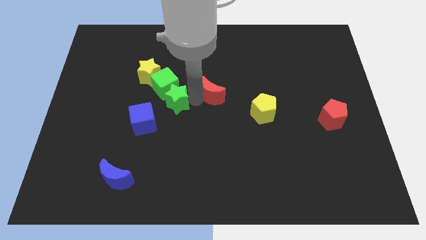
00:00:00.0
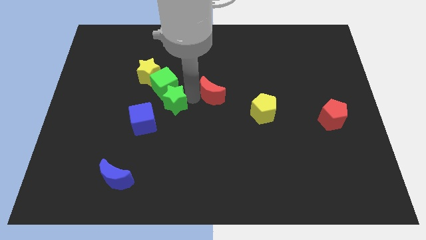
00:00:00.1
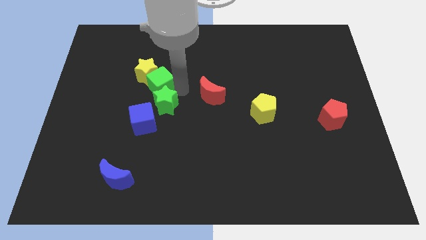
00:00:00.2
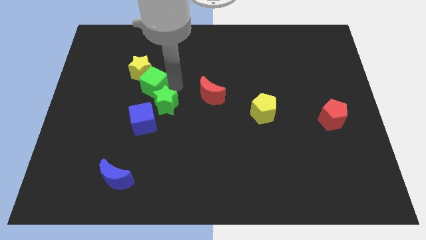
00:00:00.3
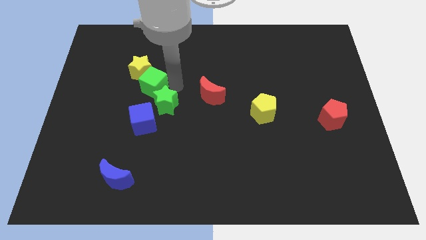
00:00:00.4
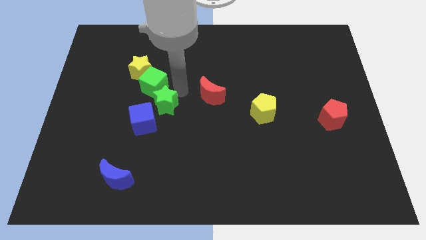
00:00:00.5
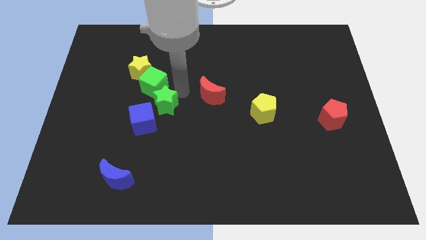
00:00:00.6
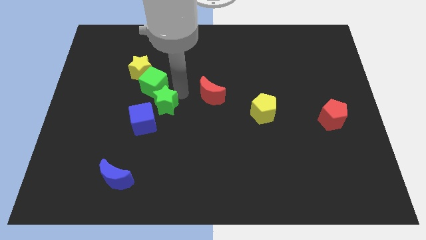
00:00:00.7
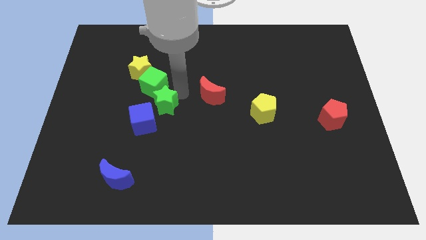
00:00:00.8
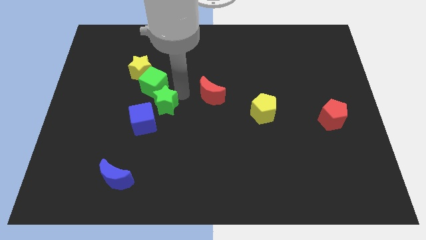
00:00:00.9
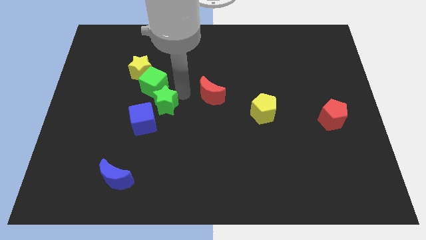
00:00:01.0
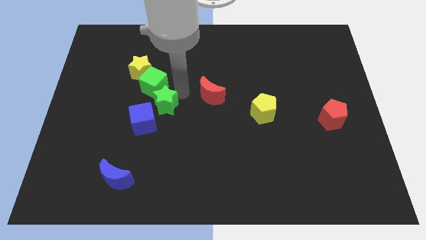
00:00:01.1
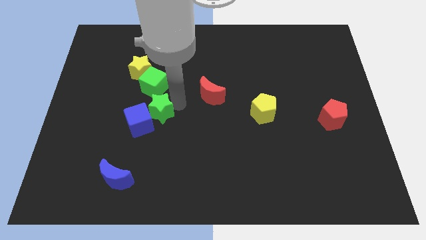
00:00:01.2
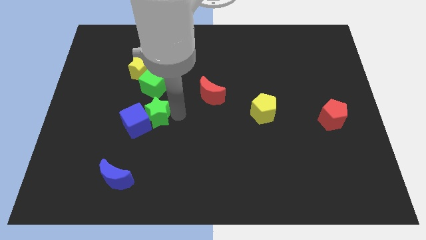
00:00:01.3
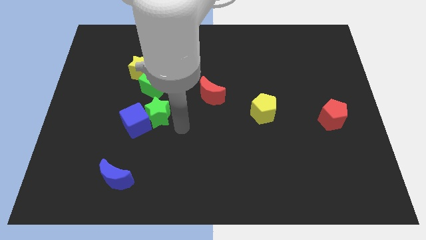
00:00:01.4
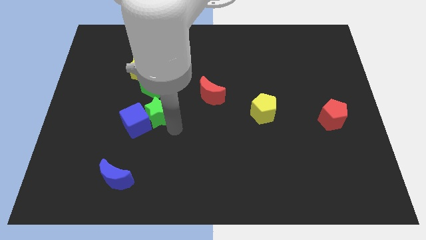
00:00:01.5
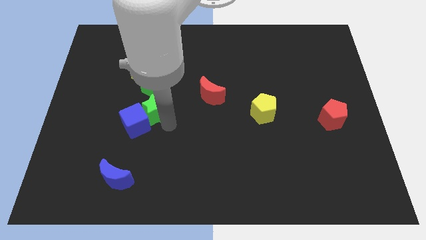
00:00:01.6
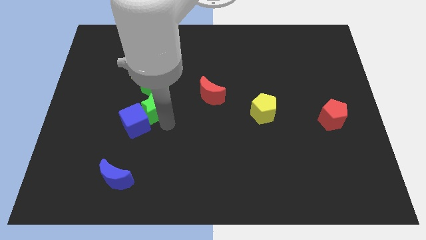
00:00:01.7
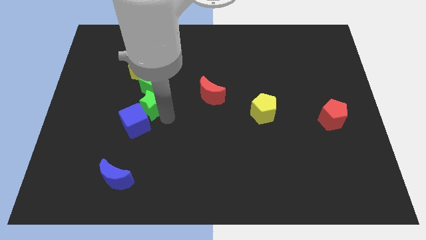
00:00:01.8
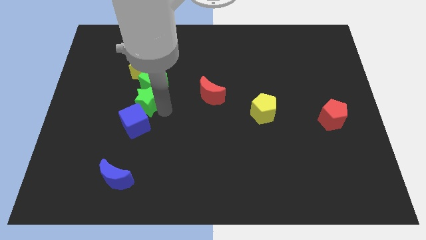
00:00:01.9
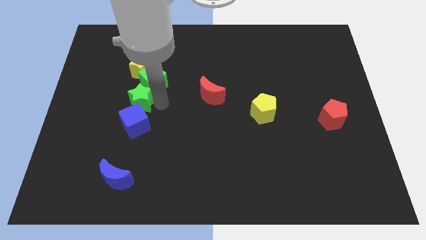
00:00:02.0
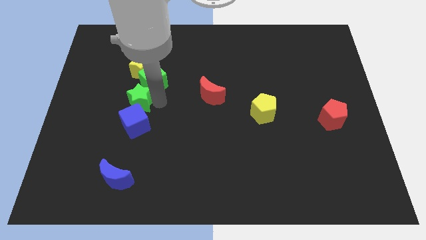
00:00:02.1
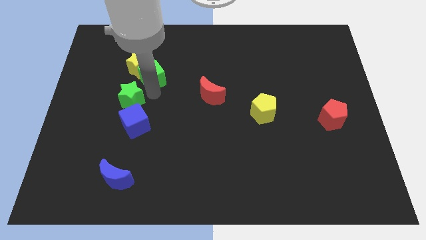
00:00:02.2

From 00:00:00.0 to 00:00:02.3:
put the green star and the blue cube together

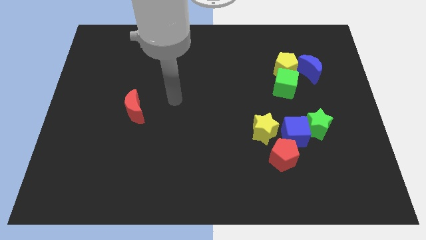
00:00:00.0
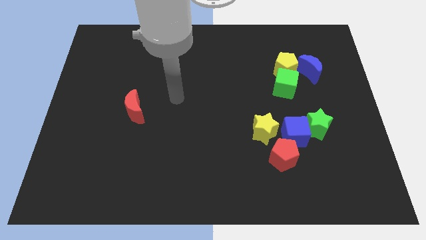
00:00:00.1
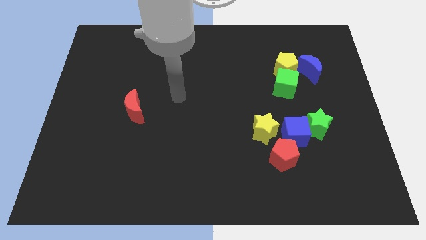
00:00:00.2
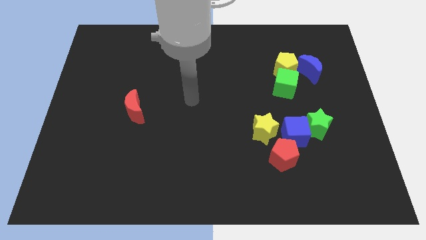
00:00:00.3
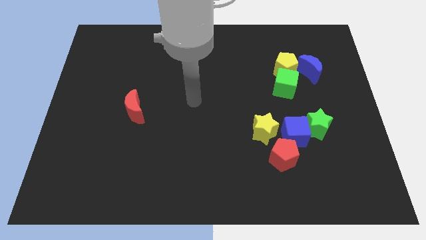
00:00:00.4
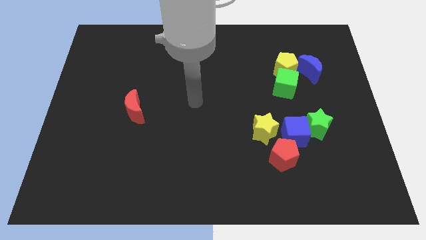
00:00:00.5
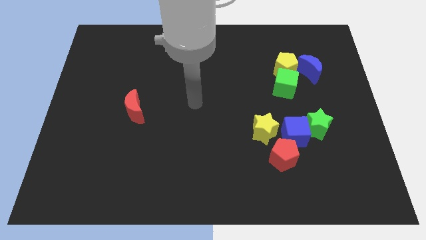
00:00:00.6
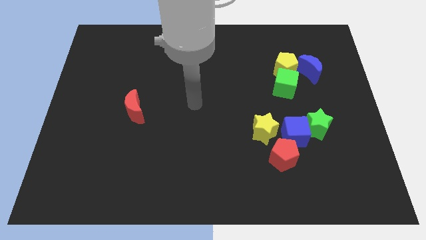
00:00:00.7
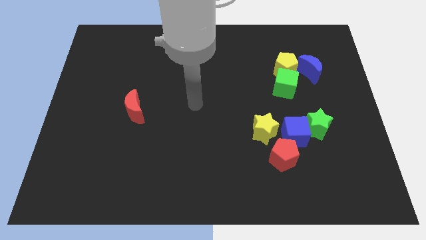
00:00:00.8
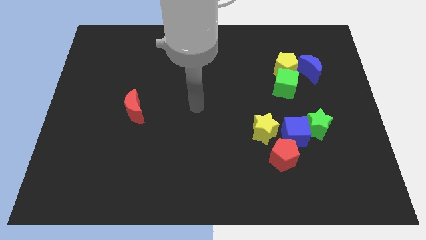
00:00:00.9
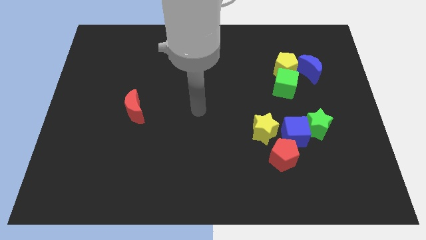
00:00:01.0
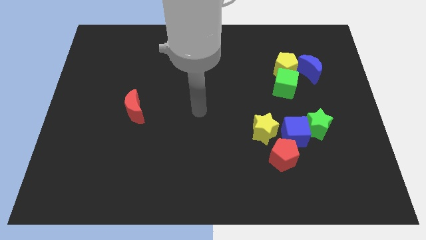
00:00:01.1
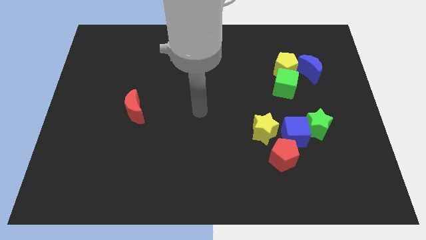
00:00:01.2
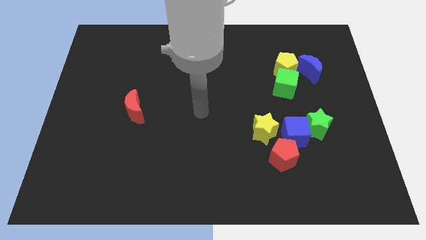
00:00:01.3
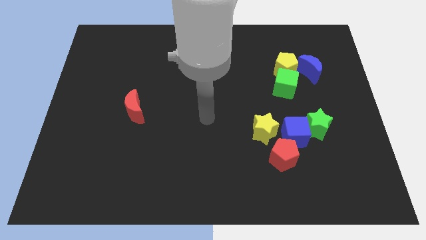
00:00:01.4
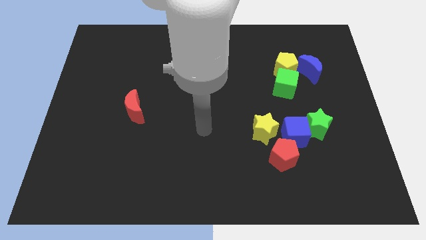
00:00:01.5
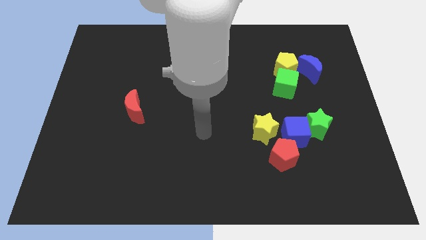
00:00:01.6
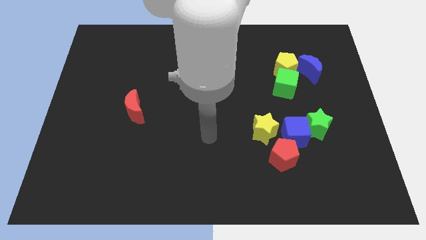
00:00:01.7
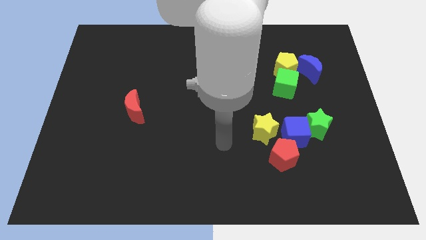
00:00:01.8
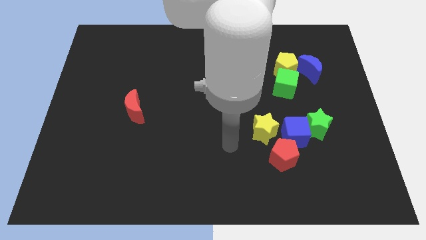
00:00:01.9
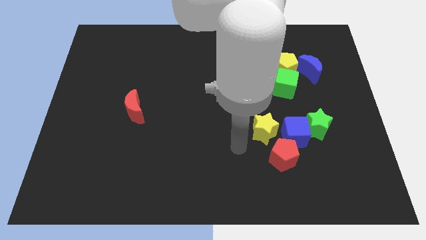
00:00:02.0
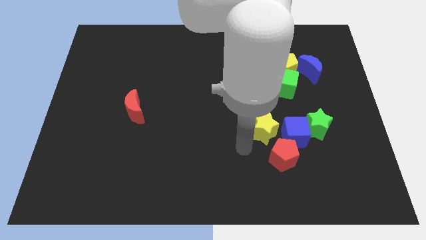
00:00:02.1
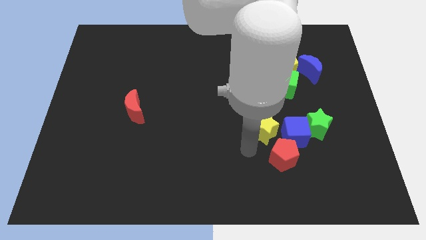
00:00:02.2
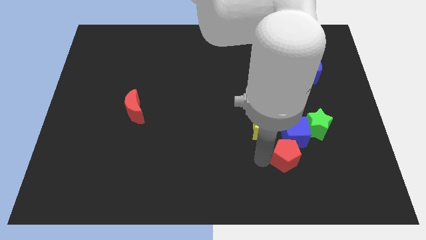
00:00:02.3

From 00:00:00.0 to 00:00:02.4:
move your arm to the bottom side of the yellow star

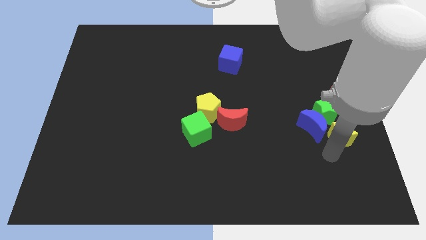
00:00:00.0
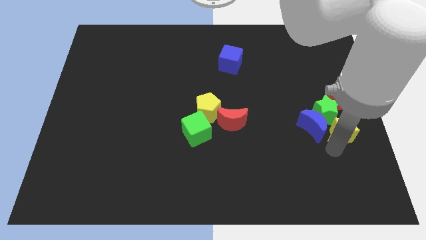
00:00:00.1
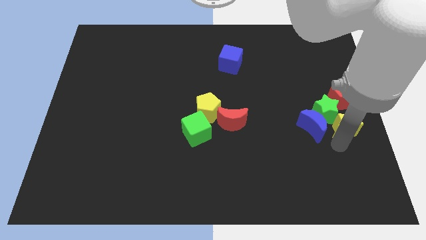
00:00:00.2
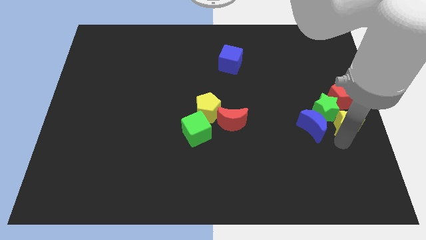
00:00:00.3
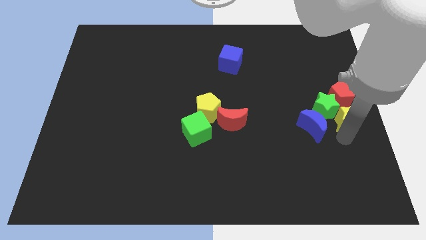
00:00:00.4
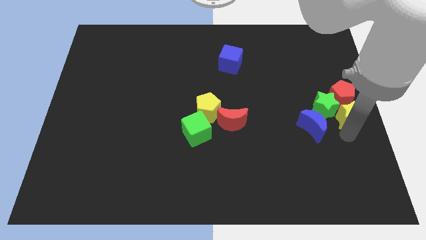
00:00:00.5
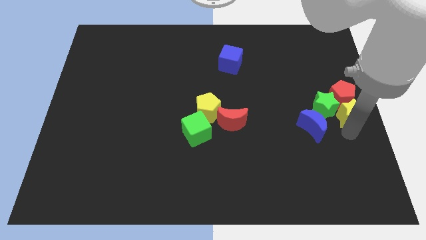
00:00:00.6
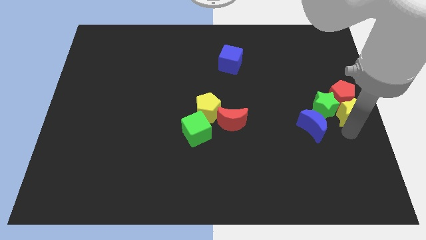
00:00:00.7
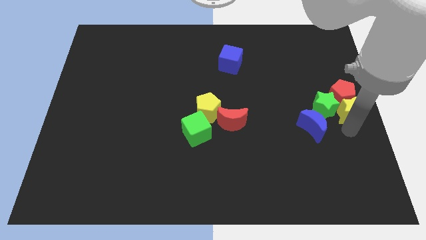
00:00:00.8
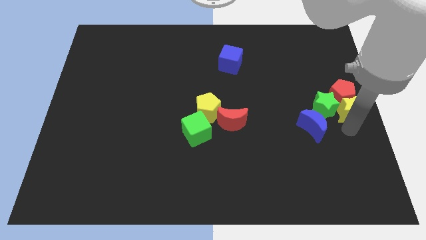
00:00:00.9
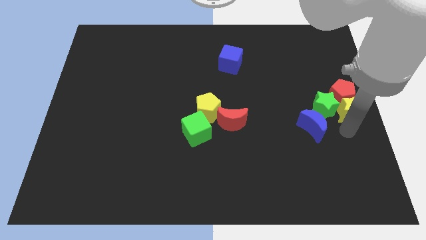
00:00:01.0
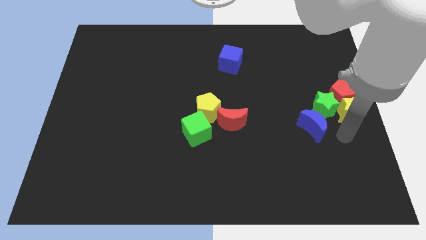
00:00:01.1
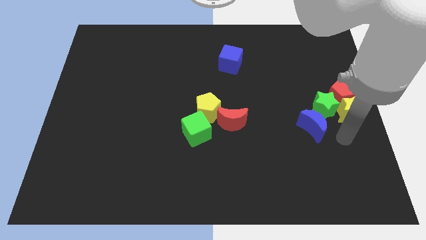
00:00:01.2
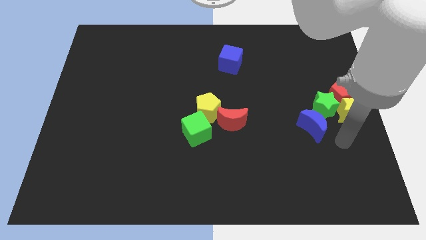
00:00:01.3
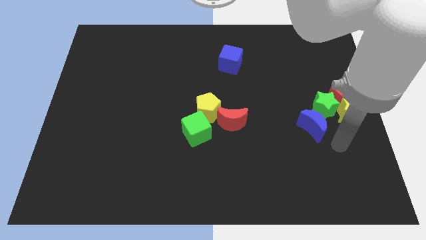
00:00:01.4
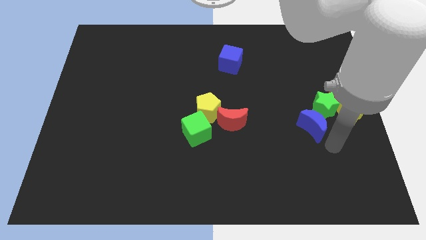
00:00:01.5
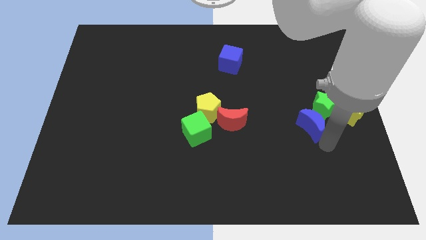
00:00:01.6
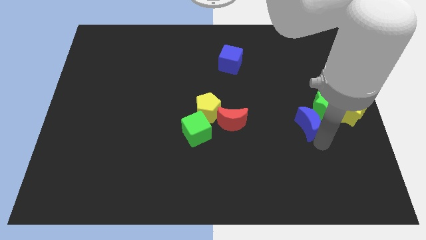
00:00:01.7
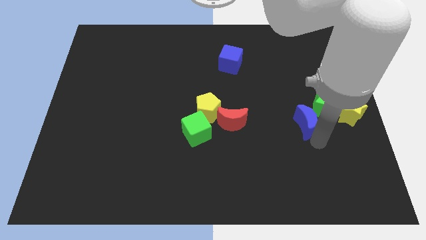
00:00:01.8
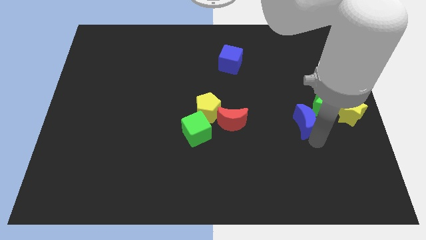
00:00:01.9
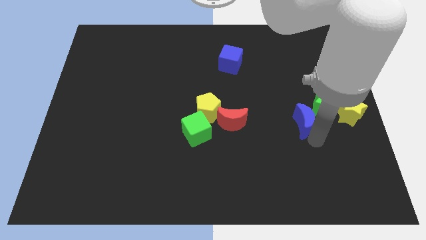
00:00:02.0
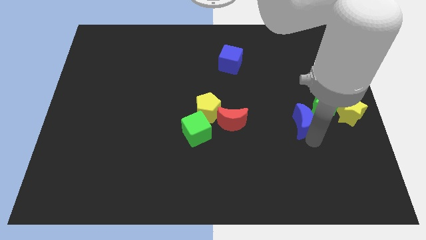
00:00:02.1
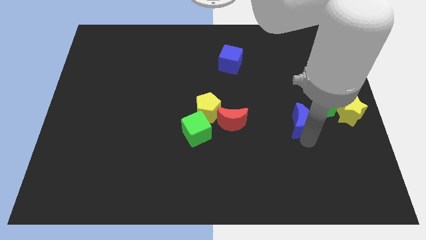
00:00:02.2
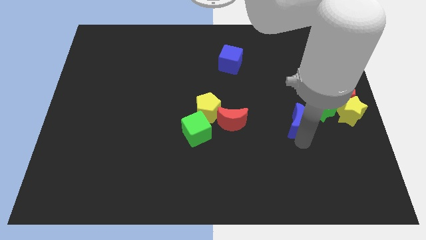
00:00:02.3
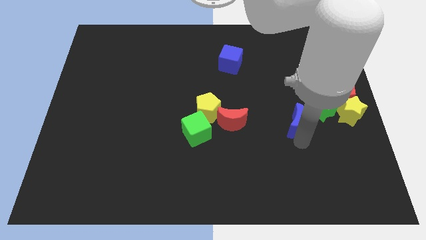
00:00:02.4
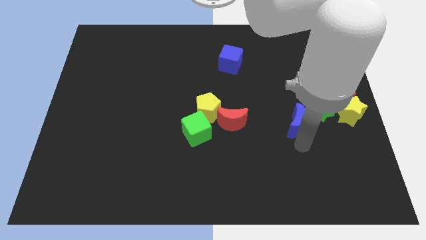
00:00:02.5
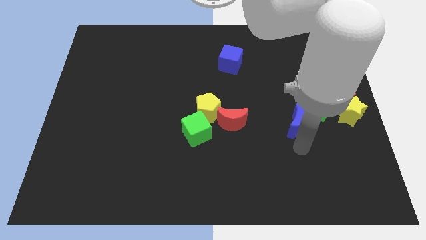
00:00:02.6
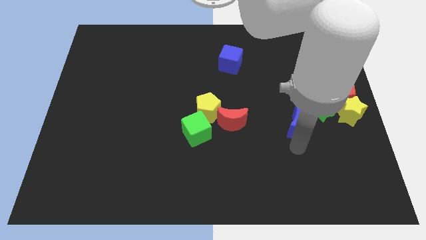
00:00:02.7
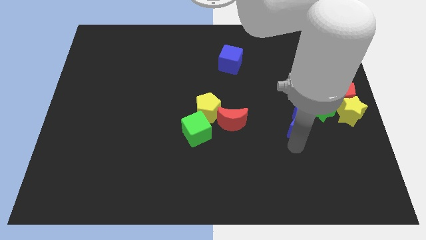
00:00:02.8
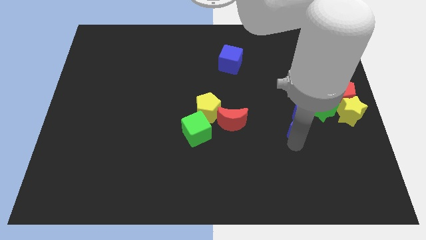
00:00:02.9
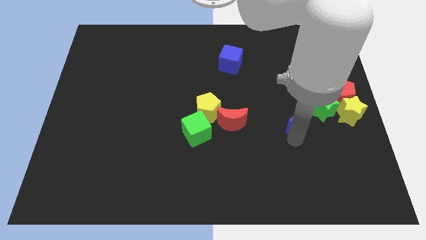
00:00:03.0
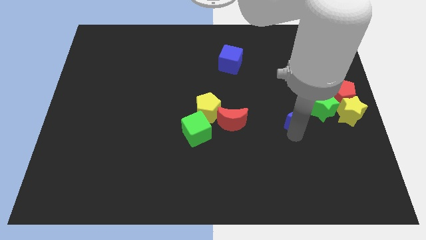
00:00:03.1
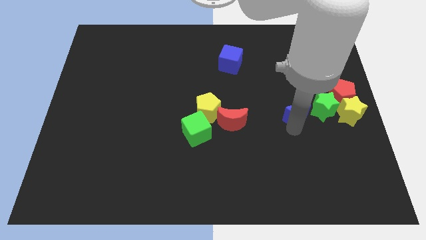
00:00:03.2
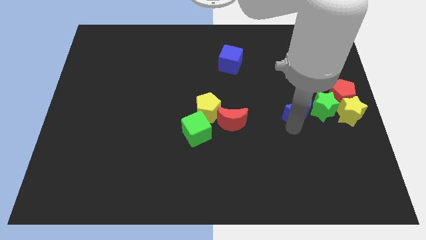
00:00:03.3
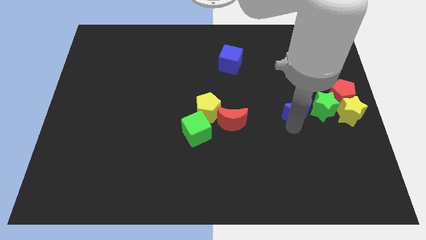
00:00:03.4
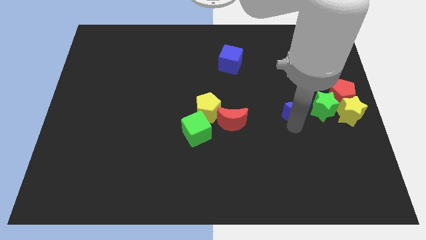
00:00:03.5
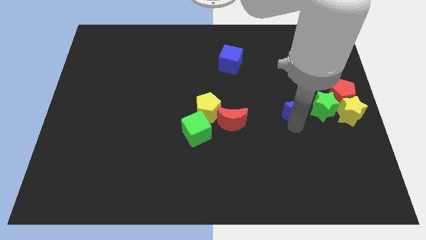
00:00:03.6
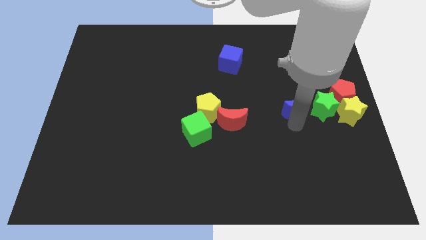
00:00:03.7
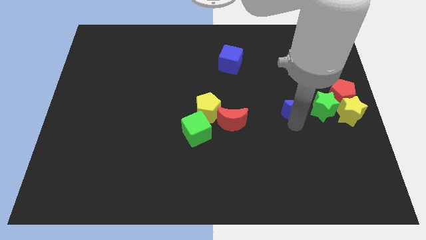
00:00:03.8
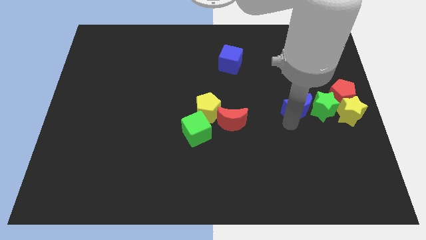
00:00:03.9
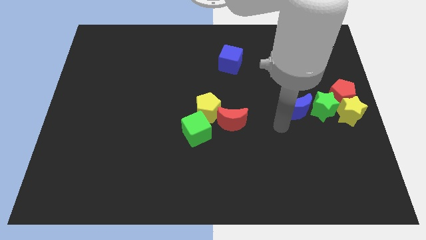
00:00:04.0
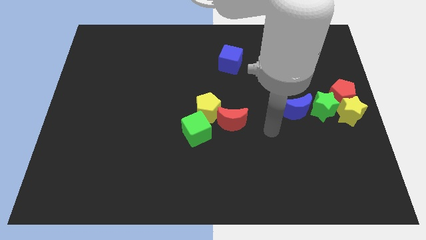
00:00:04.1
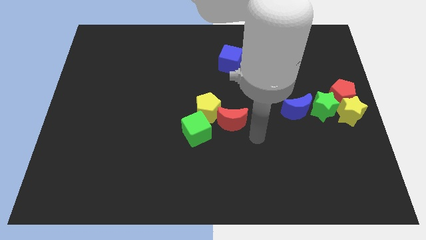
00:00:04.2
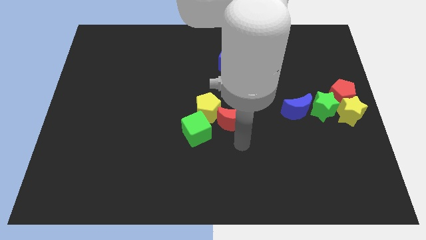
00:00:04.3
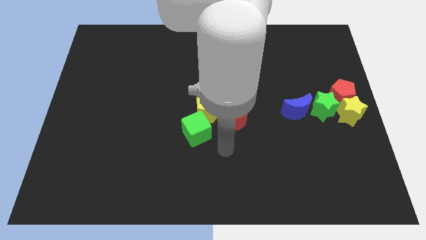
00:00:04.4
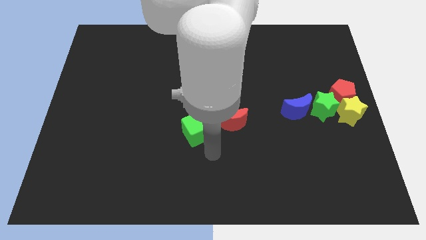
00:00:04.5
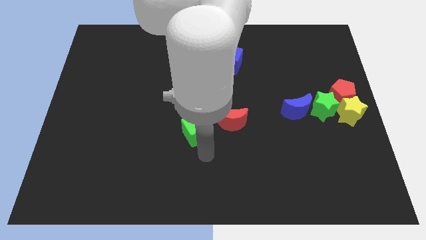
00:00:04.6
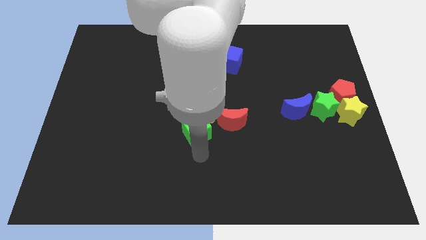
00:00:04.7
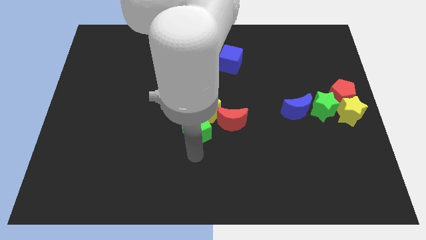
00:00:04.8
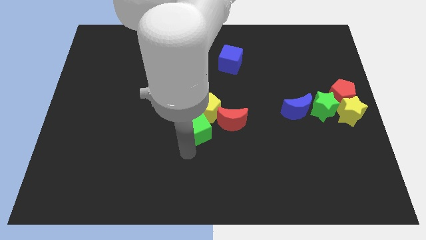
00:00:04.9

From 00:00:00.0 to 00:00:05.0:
place blue crescent to the left of green star
